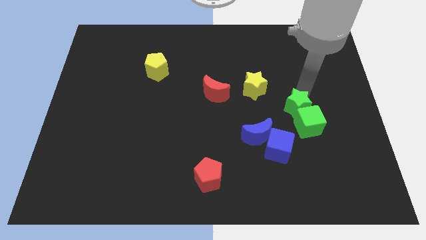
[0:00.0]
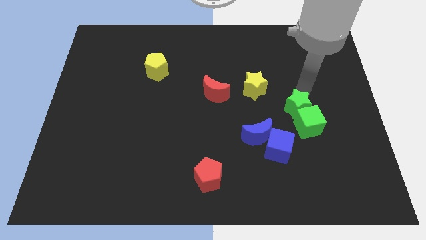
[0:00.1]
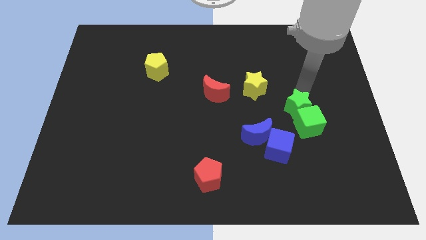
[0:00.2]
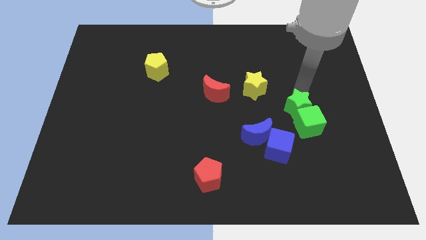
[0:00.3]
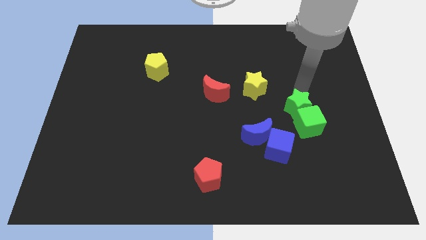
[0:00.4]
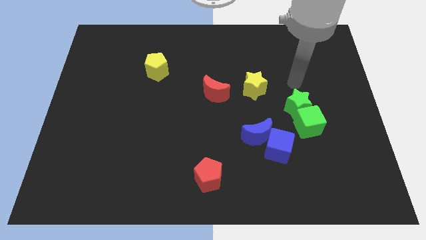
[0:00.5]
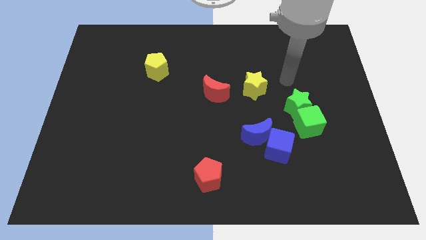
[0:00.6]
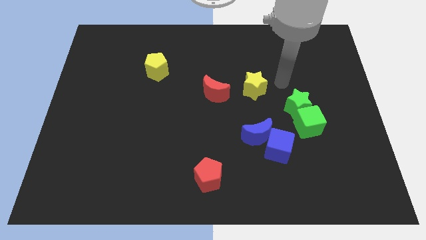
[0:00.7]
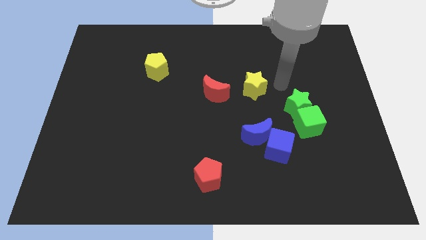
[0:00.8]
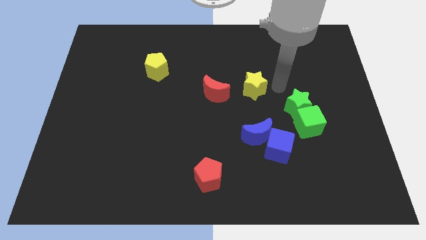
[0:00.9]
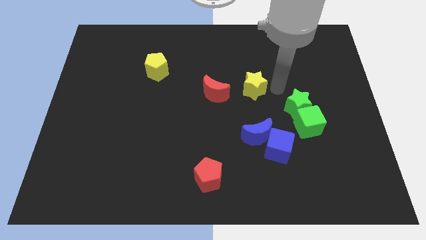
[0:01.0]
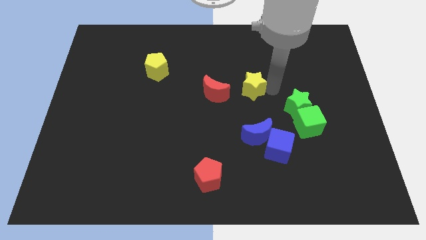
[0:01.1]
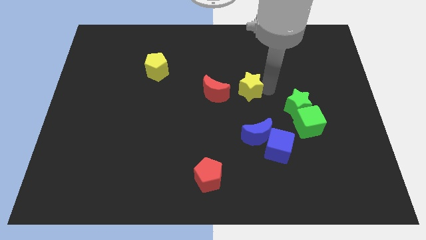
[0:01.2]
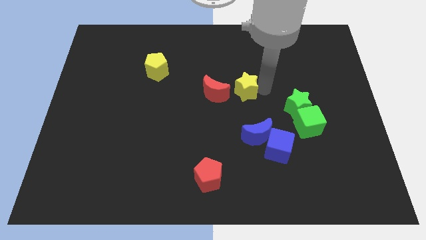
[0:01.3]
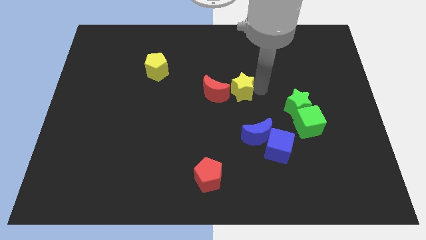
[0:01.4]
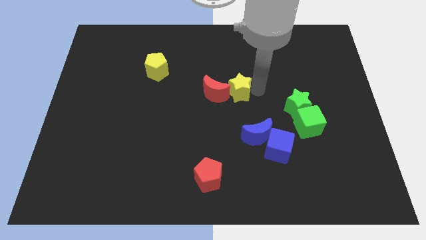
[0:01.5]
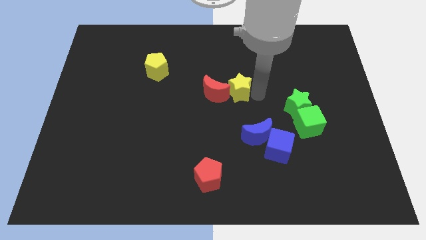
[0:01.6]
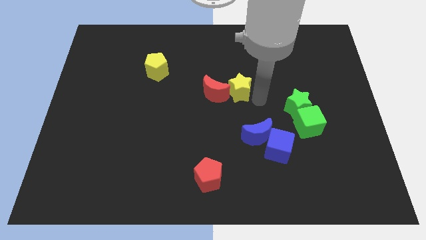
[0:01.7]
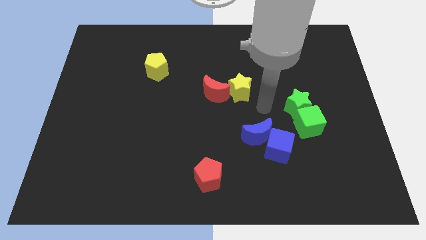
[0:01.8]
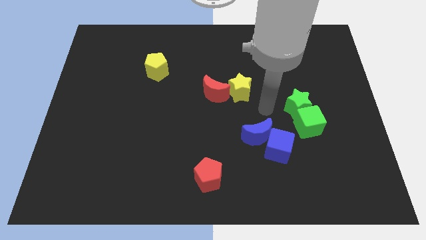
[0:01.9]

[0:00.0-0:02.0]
move yellow star into red moon

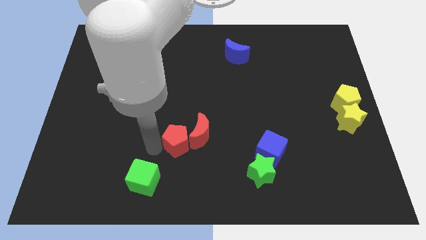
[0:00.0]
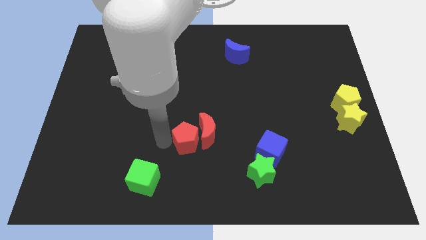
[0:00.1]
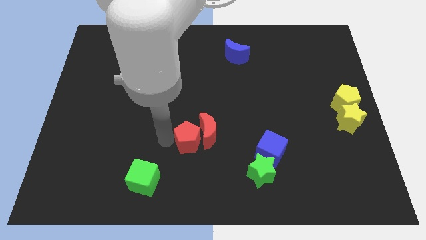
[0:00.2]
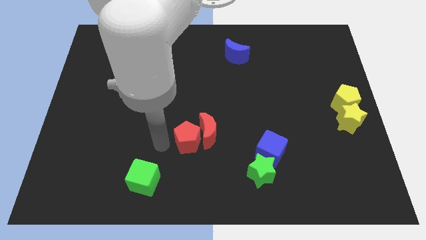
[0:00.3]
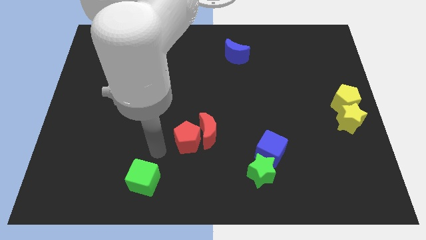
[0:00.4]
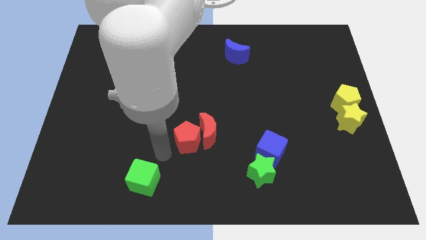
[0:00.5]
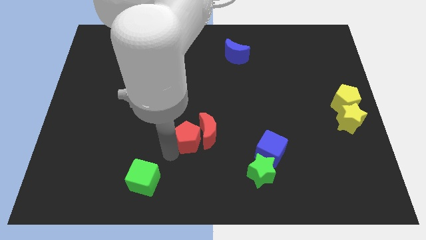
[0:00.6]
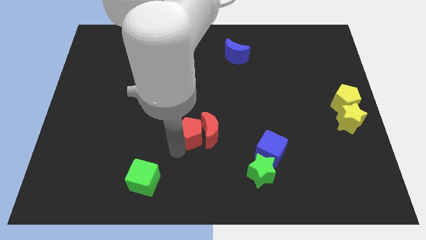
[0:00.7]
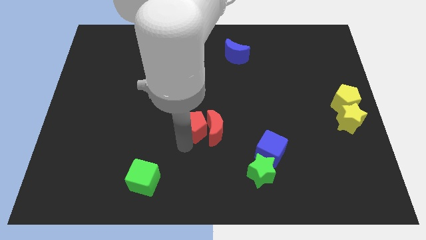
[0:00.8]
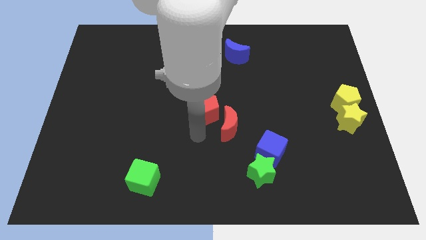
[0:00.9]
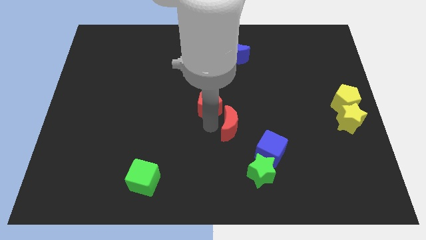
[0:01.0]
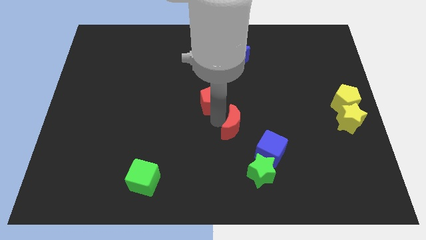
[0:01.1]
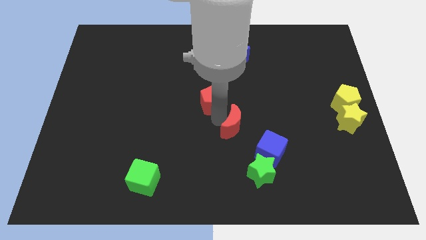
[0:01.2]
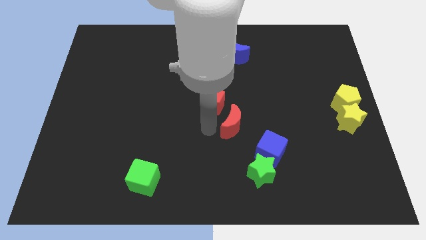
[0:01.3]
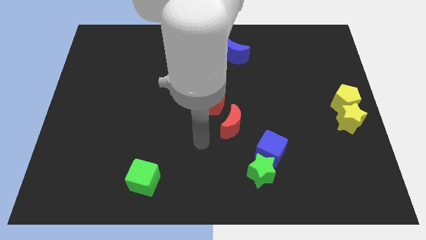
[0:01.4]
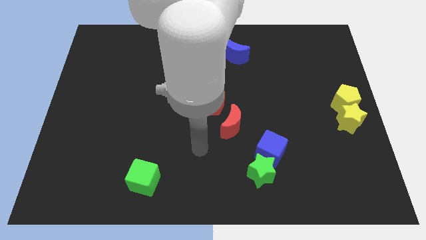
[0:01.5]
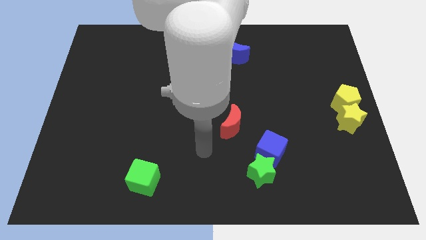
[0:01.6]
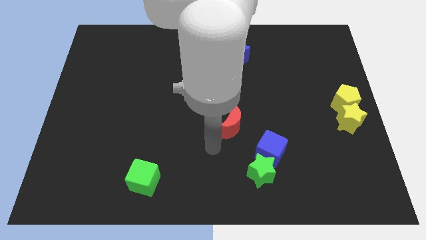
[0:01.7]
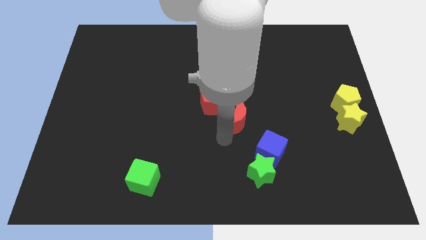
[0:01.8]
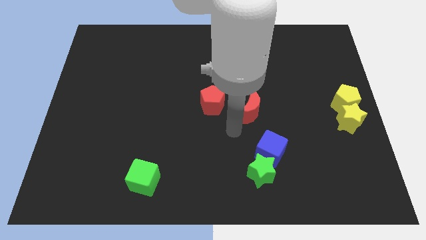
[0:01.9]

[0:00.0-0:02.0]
push red pentagon and red crescent apart from each other

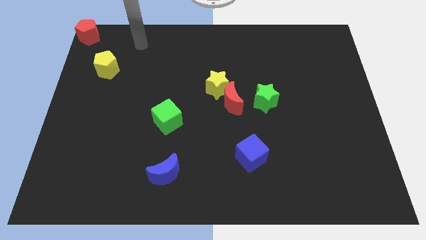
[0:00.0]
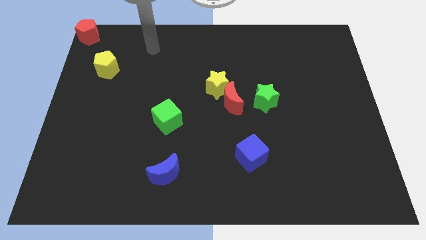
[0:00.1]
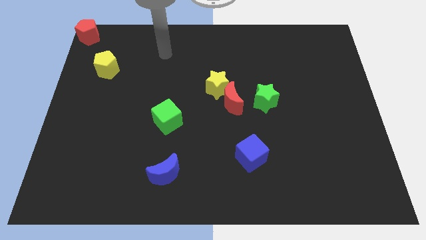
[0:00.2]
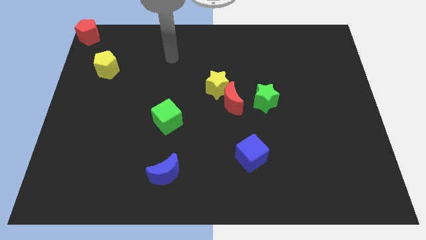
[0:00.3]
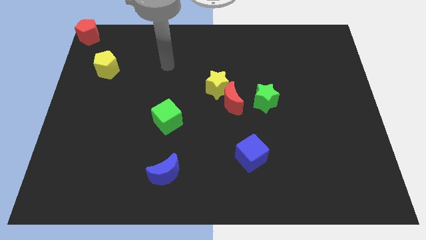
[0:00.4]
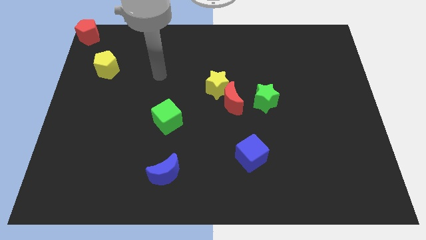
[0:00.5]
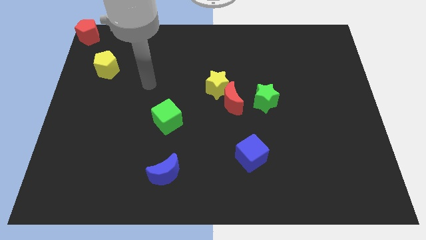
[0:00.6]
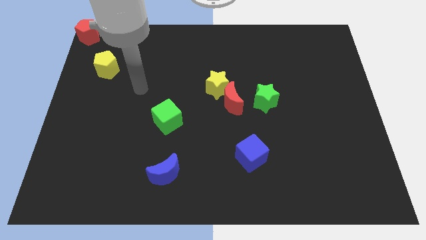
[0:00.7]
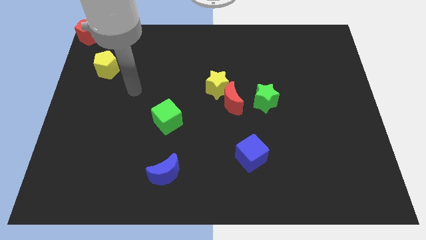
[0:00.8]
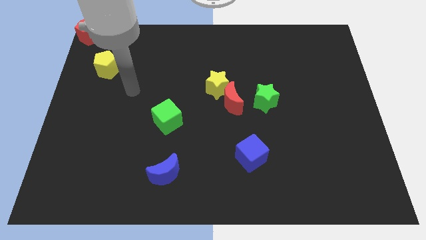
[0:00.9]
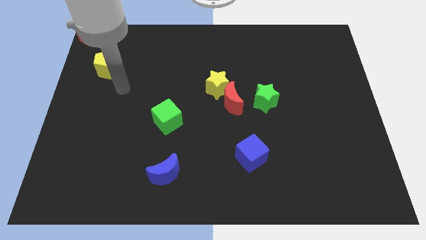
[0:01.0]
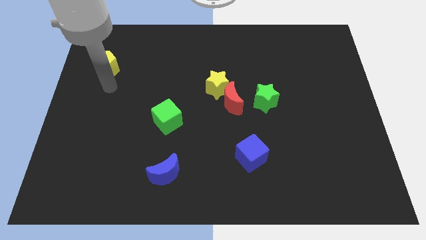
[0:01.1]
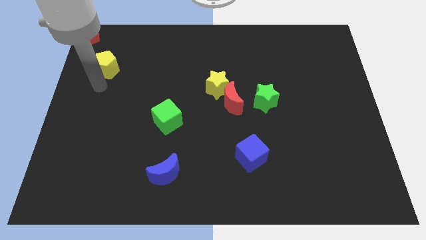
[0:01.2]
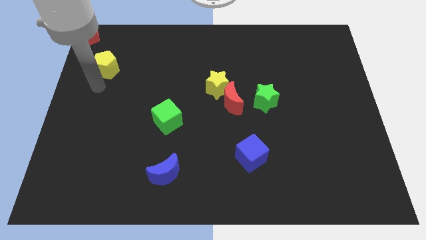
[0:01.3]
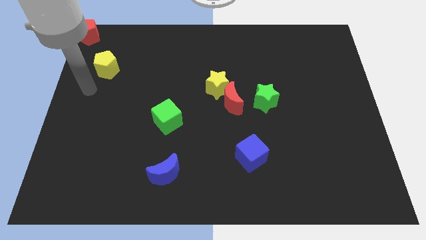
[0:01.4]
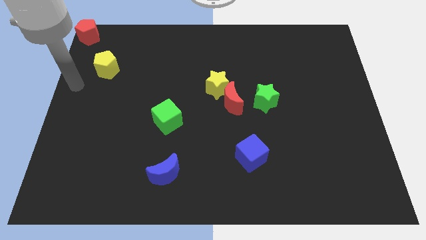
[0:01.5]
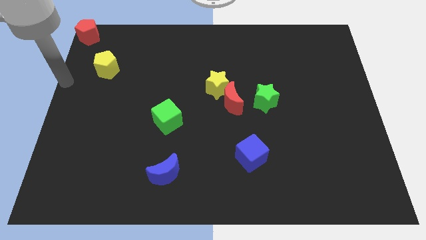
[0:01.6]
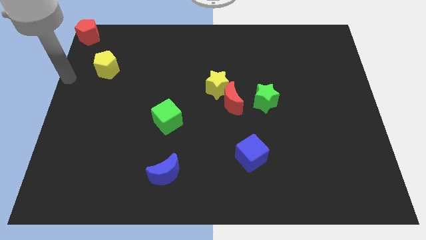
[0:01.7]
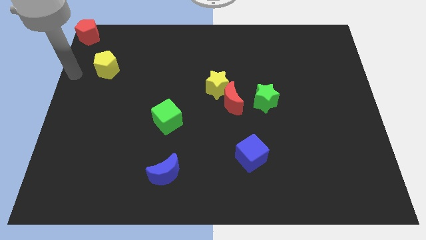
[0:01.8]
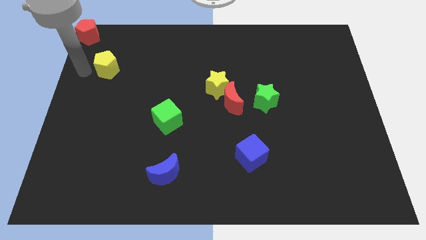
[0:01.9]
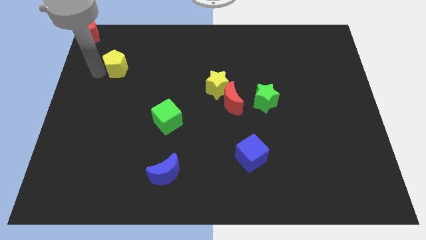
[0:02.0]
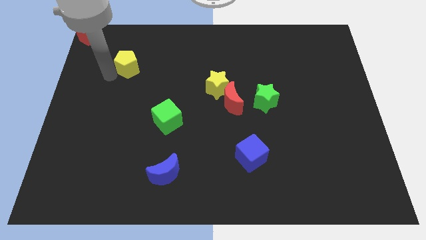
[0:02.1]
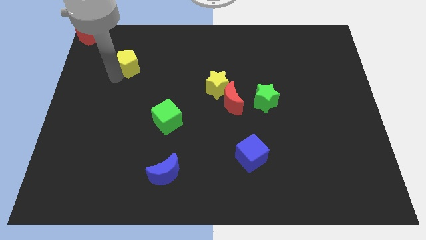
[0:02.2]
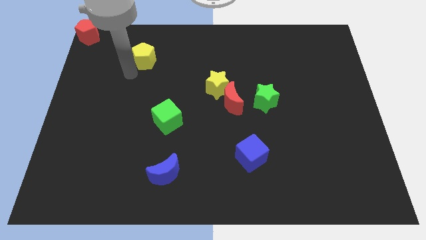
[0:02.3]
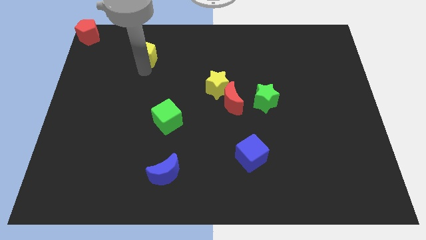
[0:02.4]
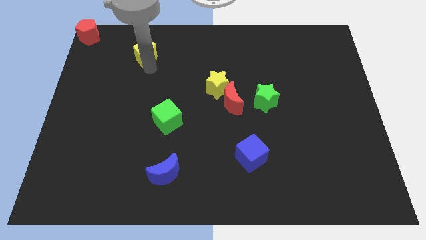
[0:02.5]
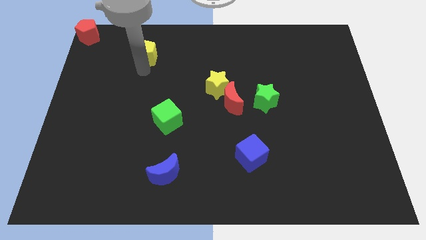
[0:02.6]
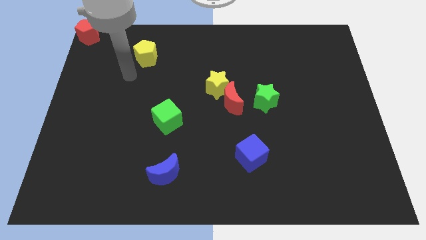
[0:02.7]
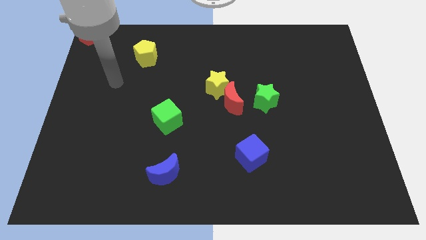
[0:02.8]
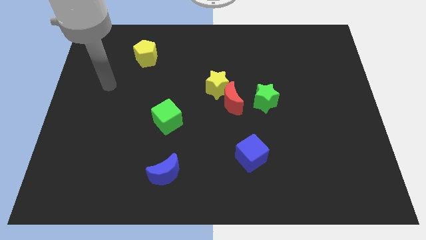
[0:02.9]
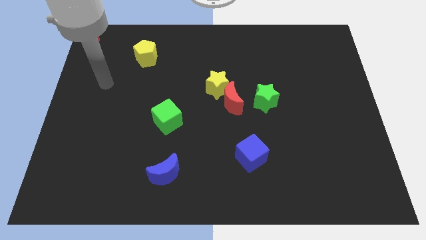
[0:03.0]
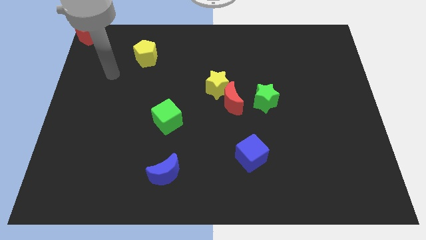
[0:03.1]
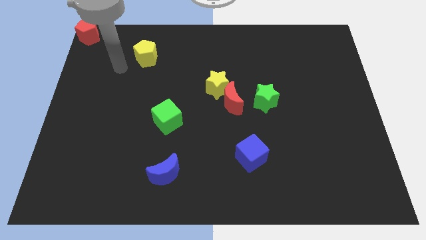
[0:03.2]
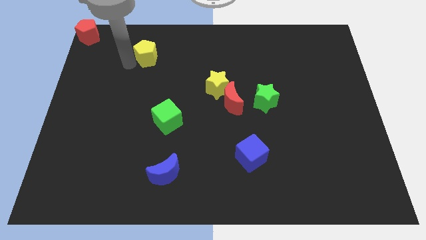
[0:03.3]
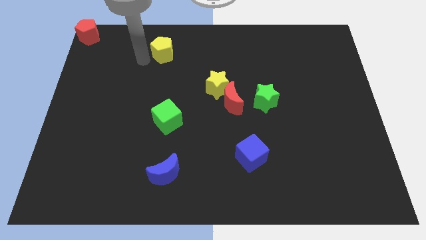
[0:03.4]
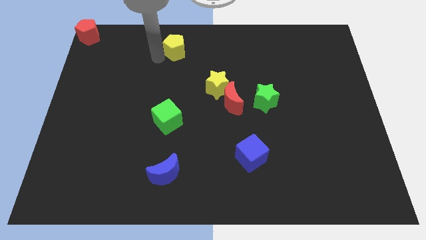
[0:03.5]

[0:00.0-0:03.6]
push the yellow pentagon towards the top center

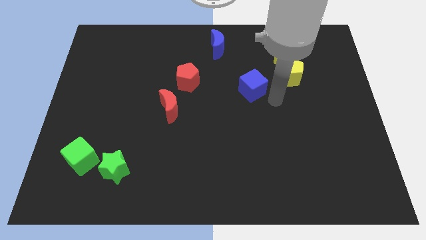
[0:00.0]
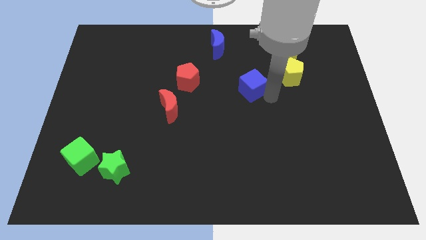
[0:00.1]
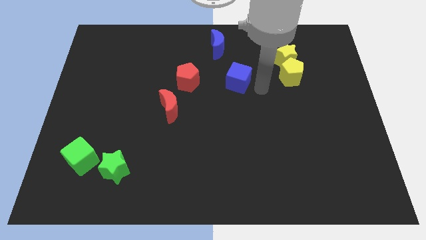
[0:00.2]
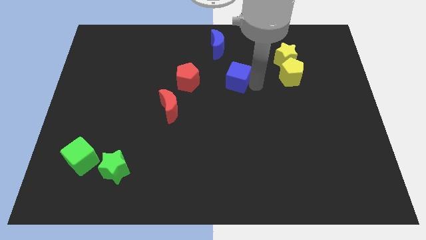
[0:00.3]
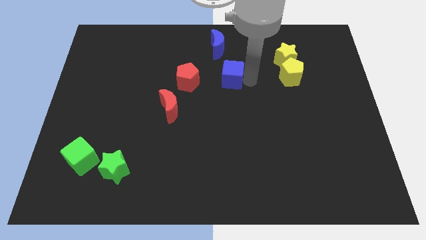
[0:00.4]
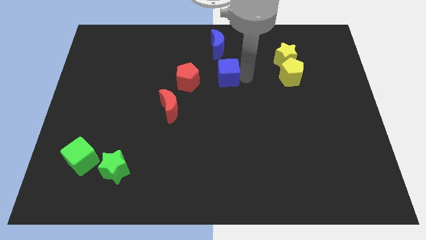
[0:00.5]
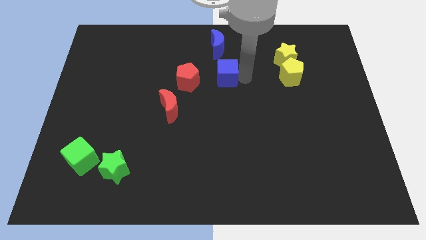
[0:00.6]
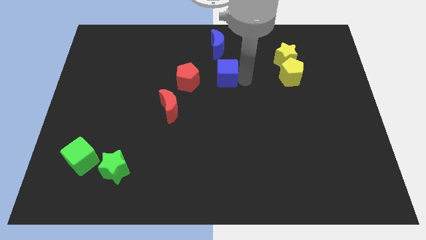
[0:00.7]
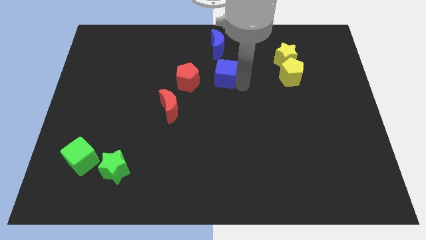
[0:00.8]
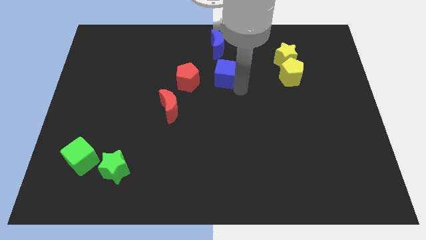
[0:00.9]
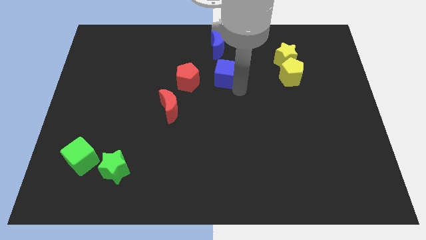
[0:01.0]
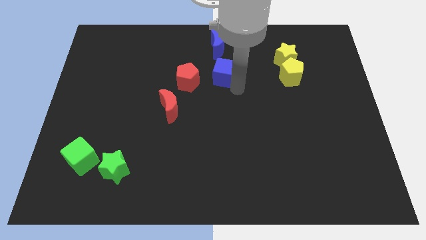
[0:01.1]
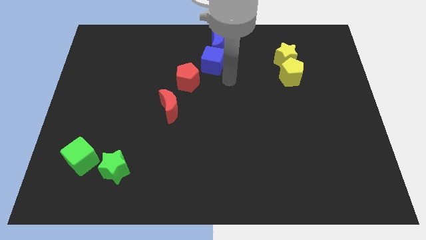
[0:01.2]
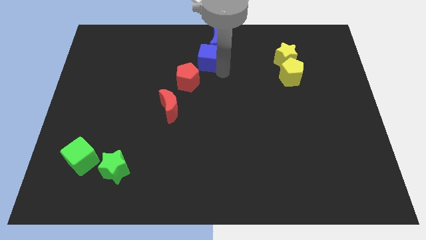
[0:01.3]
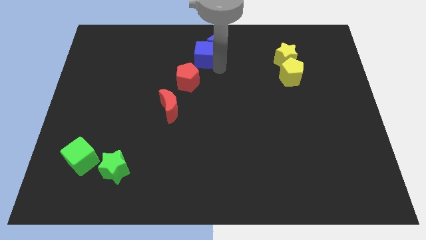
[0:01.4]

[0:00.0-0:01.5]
push the blue cube into the blue crescent
